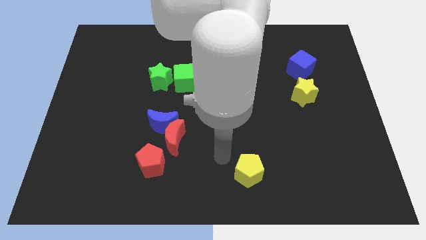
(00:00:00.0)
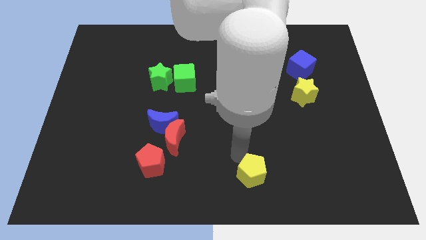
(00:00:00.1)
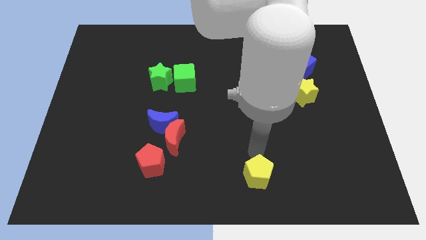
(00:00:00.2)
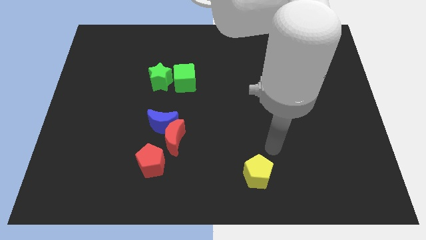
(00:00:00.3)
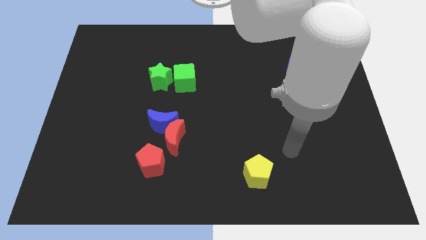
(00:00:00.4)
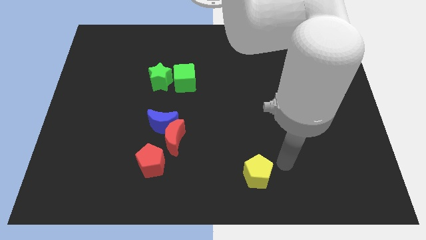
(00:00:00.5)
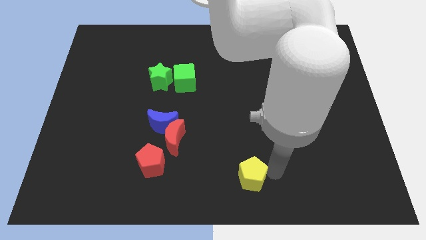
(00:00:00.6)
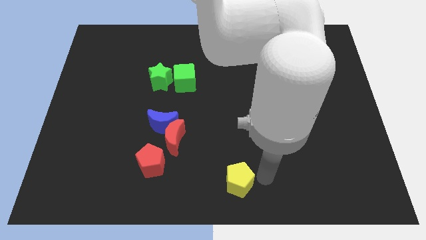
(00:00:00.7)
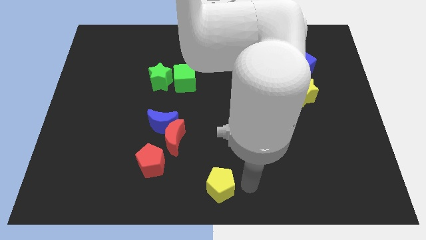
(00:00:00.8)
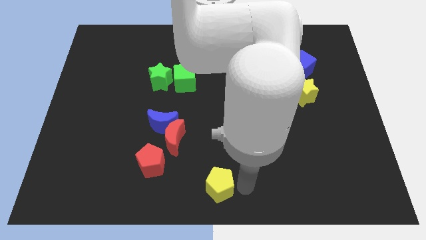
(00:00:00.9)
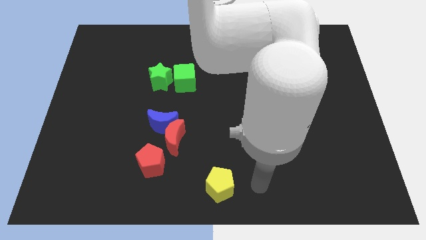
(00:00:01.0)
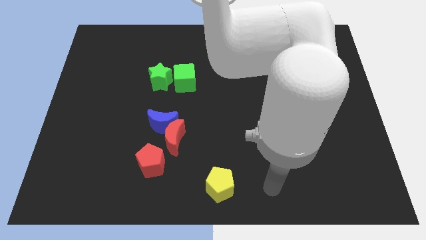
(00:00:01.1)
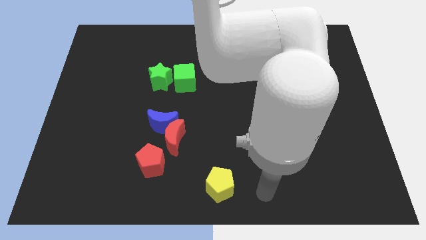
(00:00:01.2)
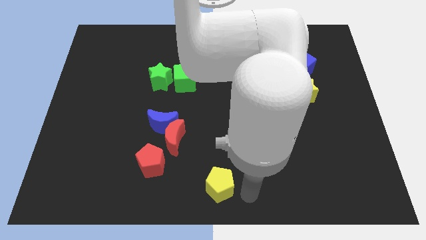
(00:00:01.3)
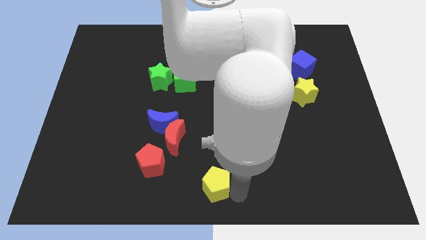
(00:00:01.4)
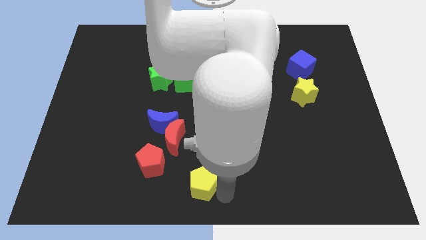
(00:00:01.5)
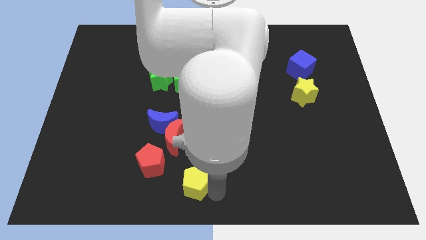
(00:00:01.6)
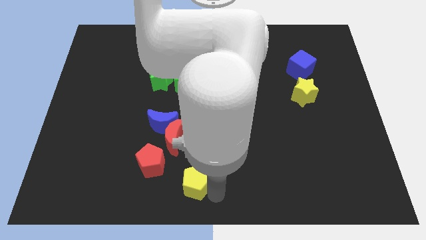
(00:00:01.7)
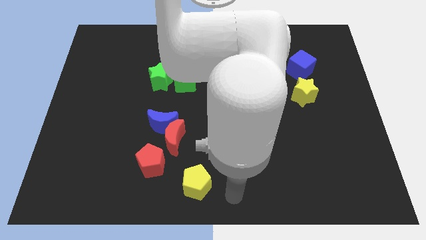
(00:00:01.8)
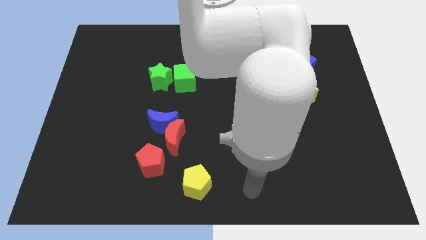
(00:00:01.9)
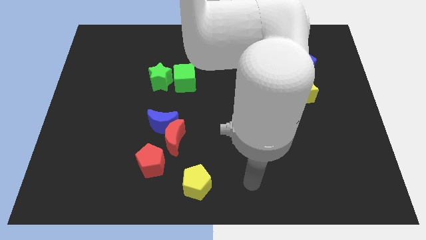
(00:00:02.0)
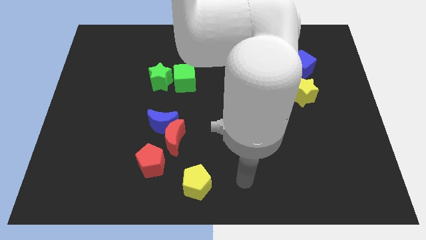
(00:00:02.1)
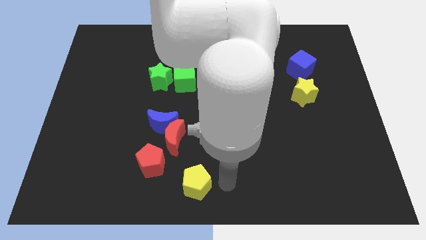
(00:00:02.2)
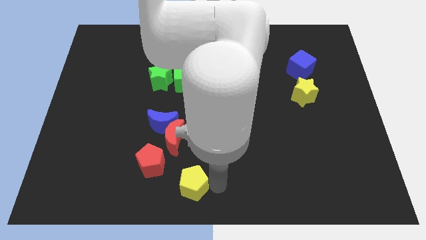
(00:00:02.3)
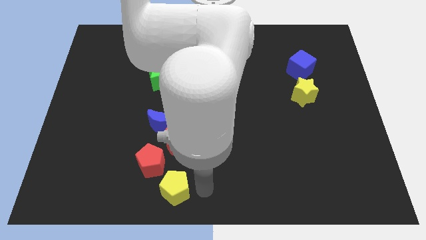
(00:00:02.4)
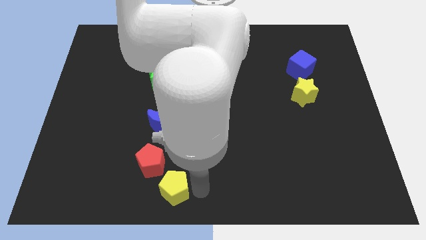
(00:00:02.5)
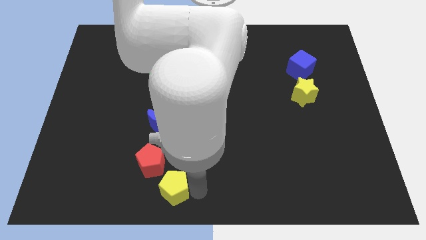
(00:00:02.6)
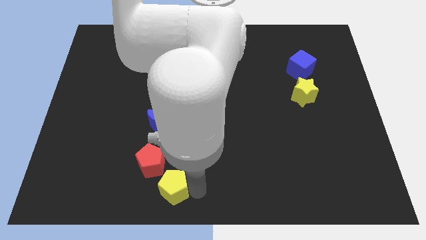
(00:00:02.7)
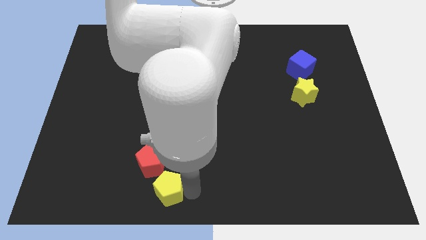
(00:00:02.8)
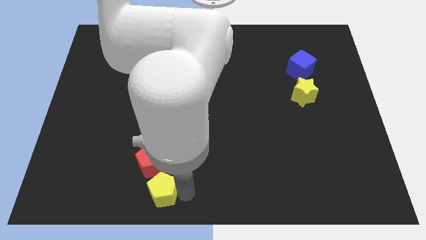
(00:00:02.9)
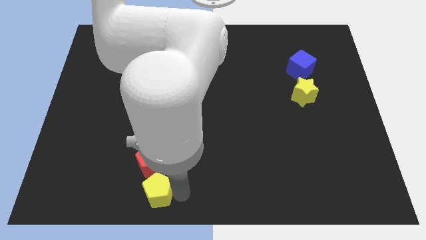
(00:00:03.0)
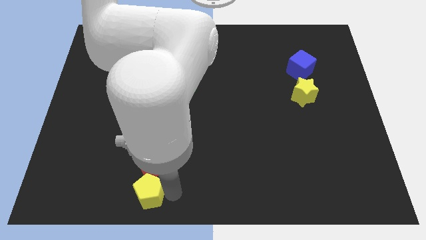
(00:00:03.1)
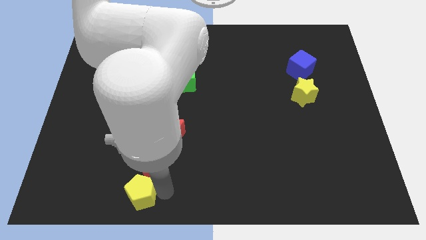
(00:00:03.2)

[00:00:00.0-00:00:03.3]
drag the yellow pentagon below red pentagon

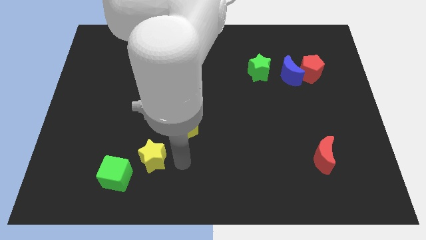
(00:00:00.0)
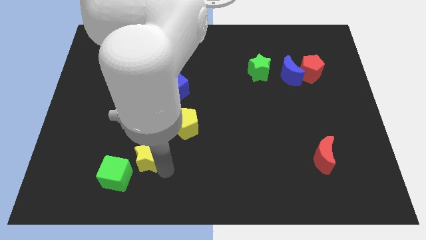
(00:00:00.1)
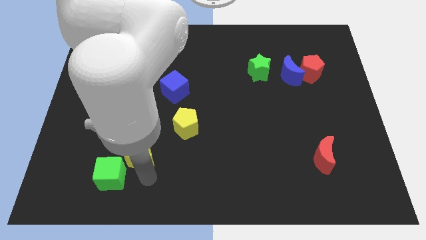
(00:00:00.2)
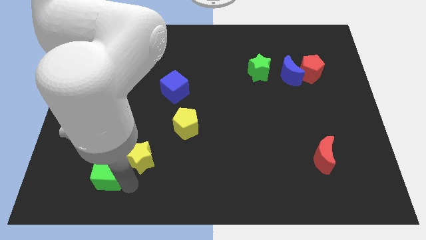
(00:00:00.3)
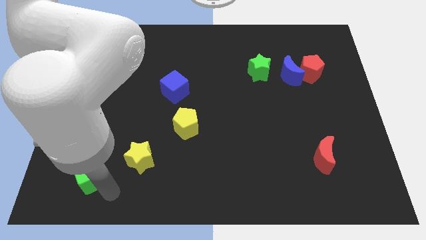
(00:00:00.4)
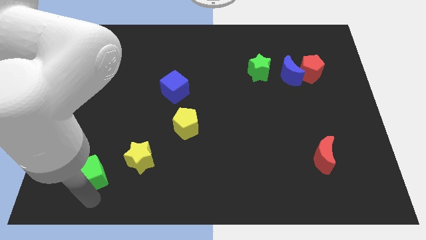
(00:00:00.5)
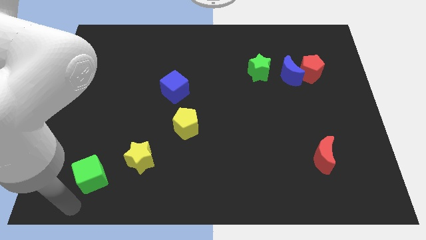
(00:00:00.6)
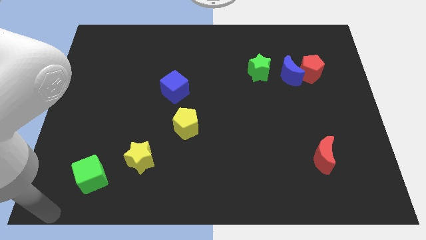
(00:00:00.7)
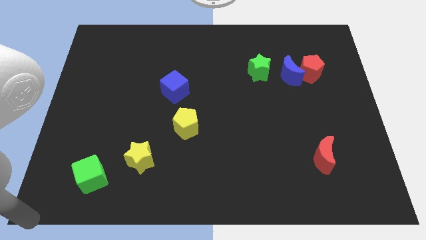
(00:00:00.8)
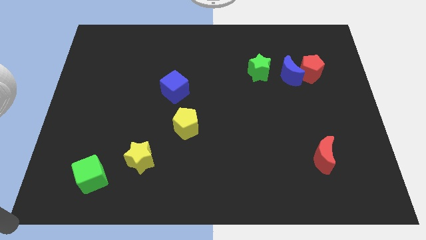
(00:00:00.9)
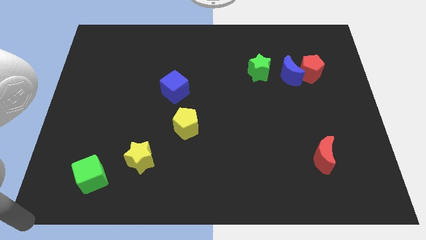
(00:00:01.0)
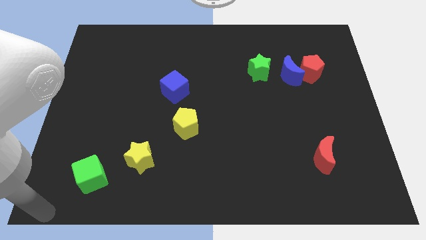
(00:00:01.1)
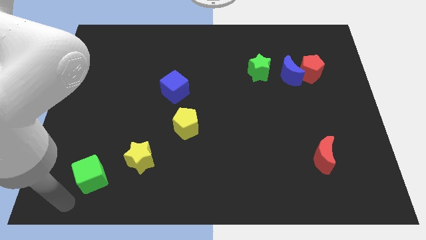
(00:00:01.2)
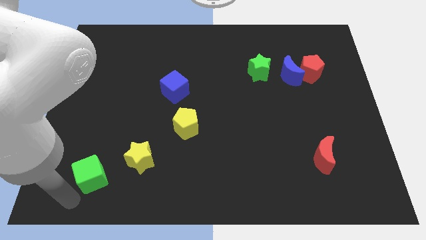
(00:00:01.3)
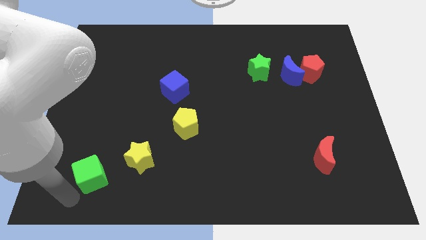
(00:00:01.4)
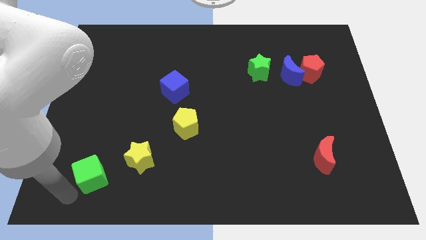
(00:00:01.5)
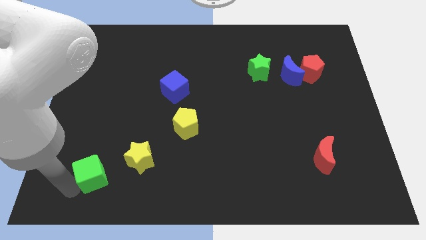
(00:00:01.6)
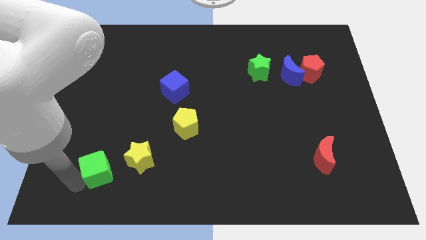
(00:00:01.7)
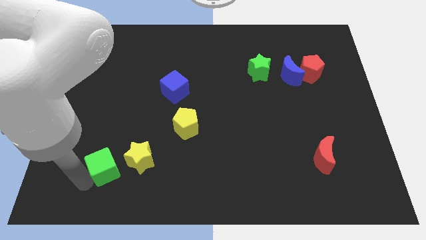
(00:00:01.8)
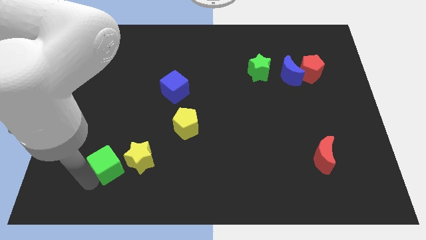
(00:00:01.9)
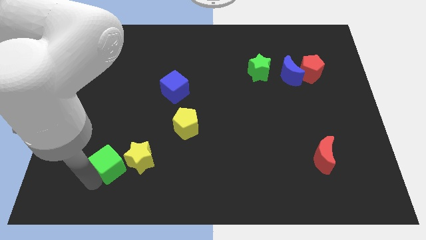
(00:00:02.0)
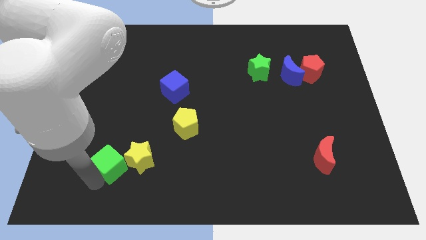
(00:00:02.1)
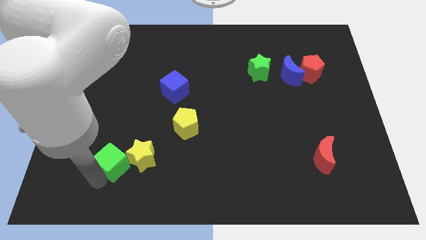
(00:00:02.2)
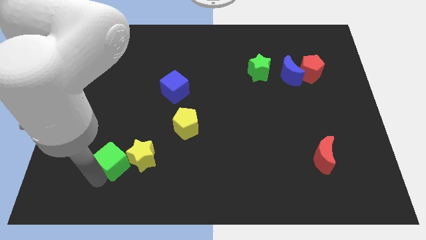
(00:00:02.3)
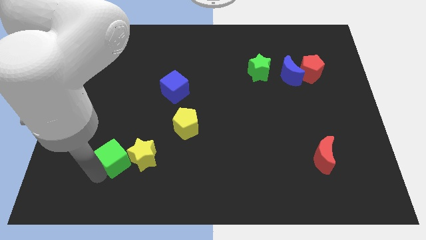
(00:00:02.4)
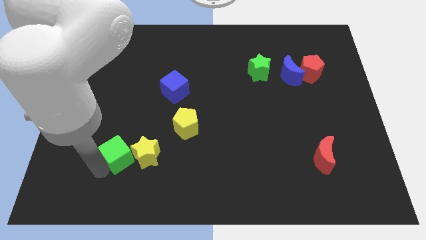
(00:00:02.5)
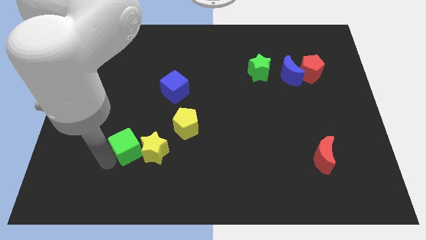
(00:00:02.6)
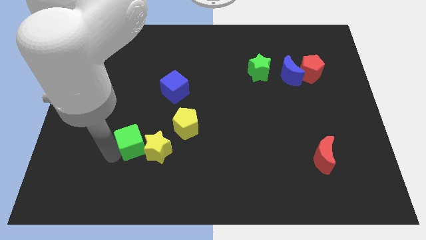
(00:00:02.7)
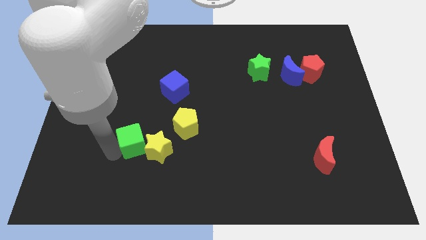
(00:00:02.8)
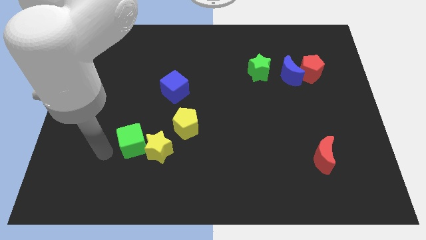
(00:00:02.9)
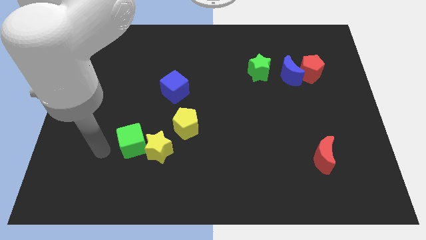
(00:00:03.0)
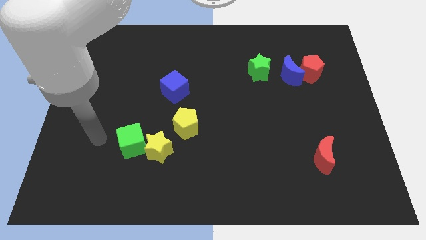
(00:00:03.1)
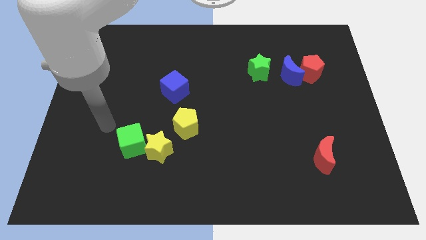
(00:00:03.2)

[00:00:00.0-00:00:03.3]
push green cube close to the yellow star

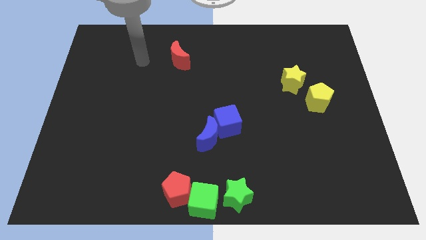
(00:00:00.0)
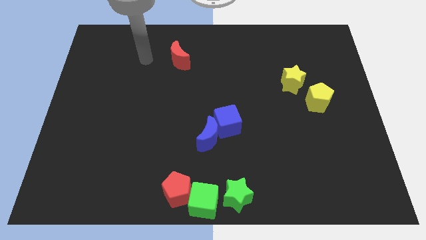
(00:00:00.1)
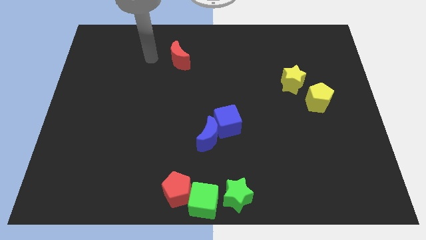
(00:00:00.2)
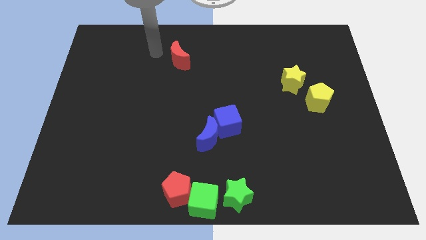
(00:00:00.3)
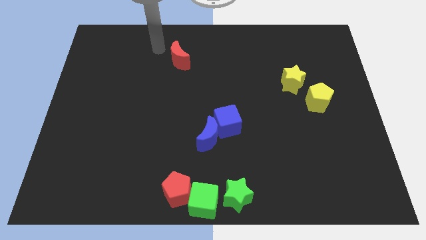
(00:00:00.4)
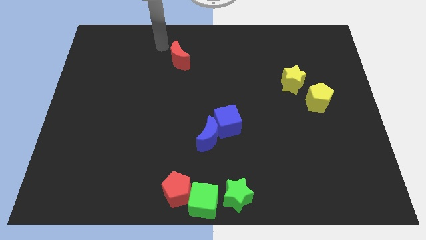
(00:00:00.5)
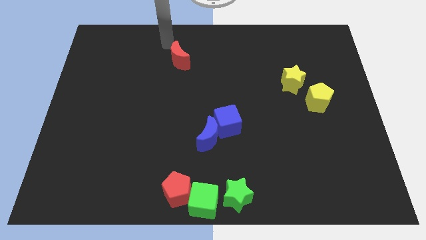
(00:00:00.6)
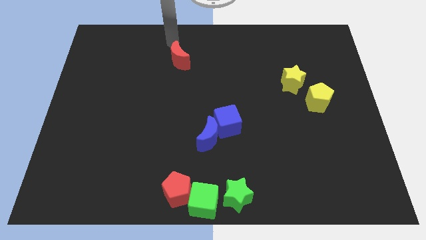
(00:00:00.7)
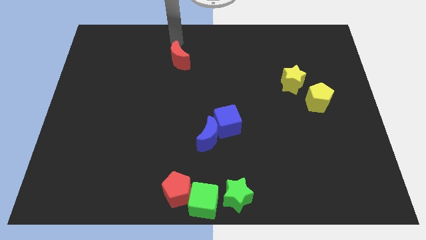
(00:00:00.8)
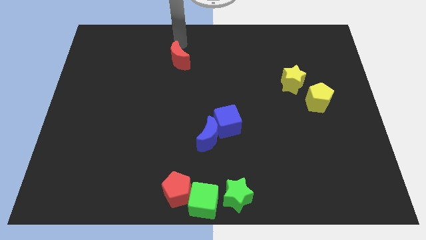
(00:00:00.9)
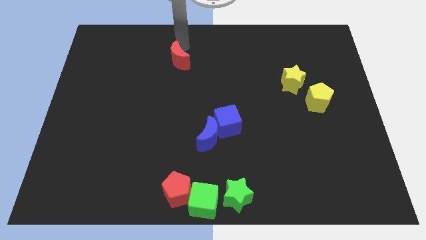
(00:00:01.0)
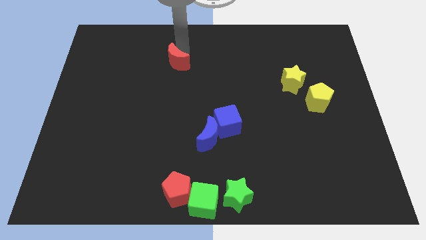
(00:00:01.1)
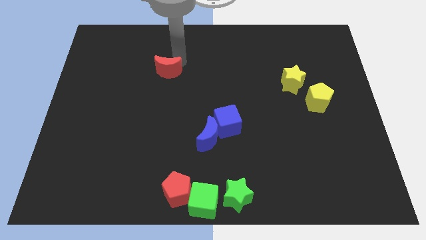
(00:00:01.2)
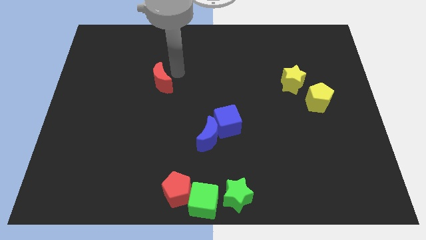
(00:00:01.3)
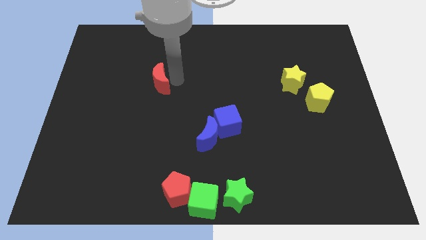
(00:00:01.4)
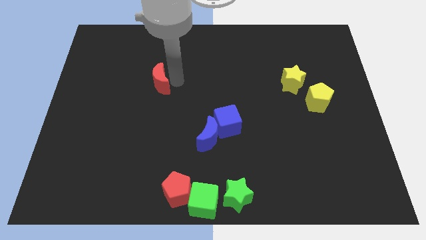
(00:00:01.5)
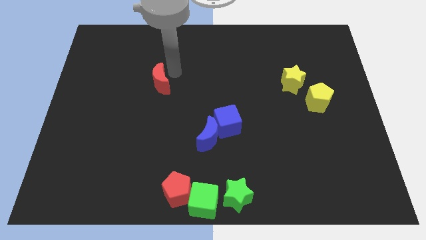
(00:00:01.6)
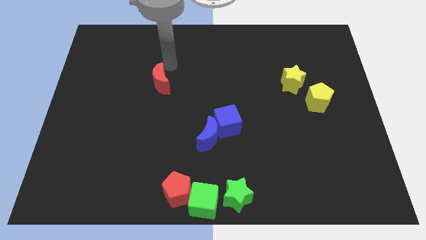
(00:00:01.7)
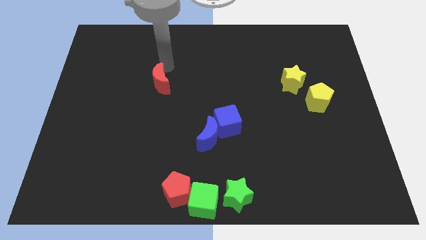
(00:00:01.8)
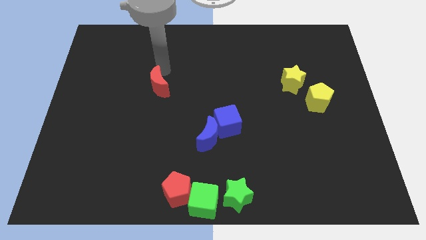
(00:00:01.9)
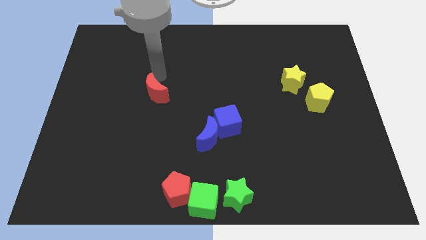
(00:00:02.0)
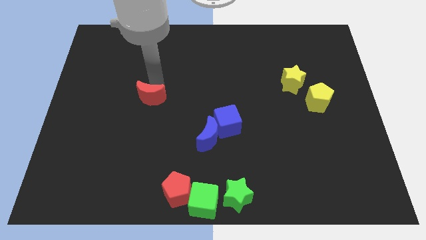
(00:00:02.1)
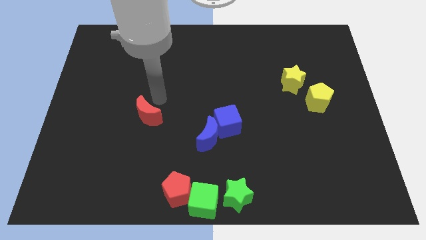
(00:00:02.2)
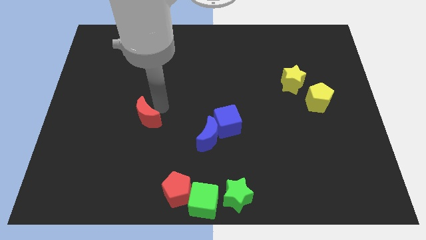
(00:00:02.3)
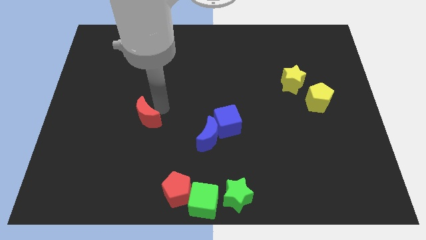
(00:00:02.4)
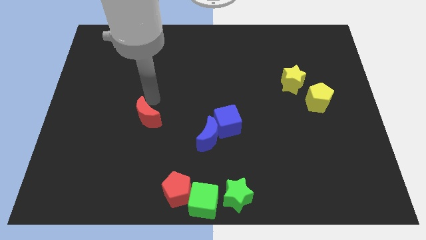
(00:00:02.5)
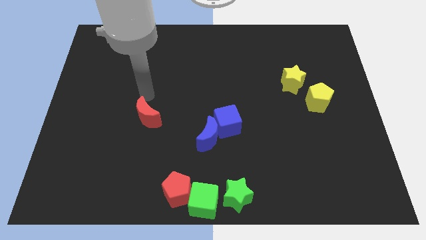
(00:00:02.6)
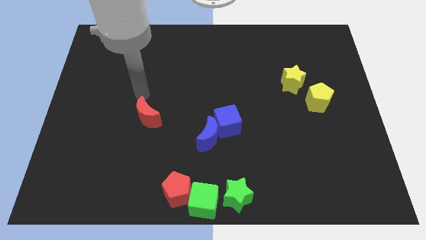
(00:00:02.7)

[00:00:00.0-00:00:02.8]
push the red crescent downwards
